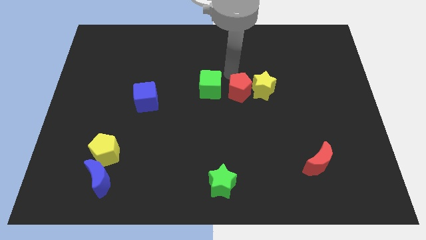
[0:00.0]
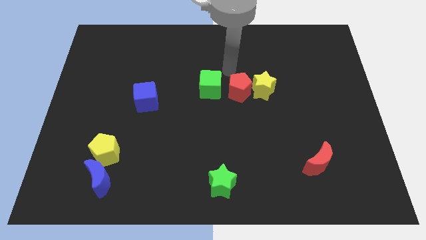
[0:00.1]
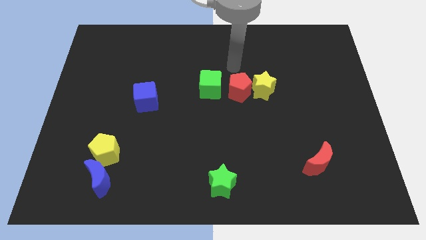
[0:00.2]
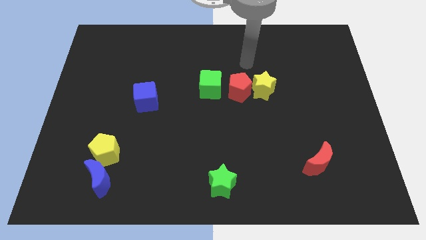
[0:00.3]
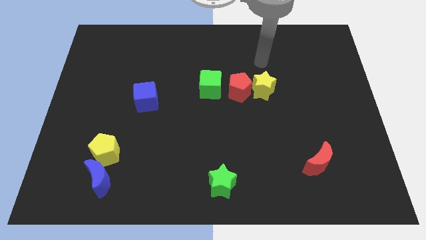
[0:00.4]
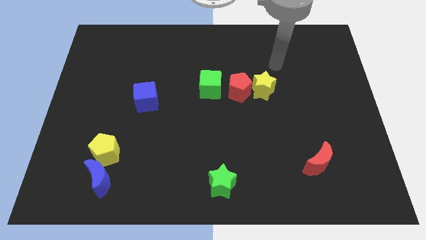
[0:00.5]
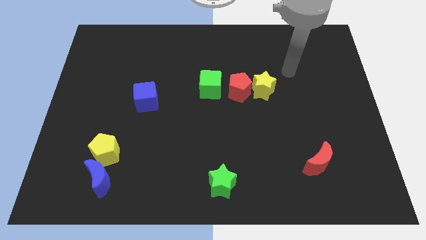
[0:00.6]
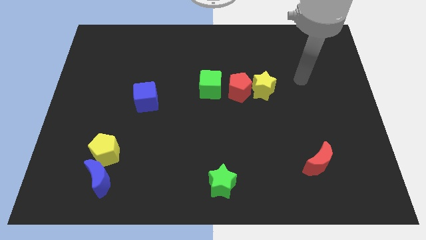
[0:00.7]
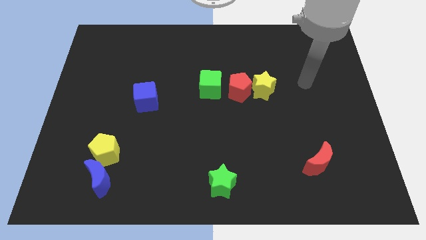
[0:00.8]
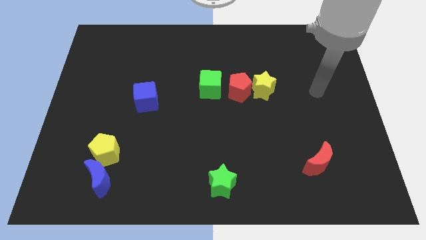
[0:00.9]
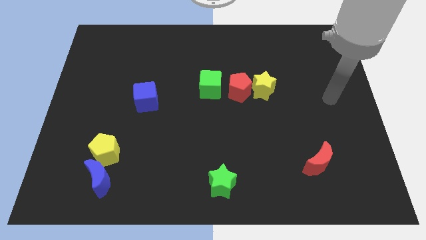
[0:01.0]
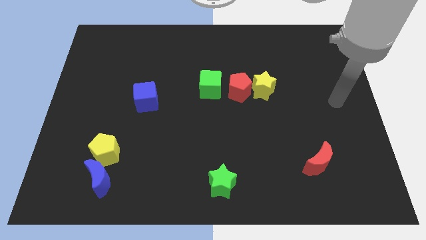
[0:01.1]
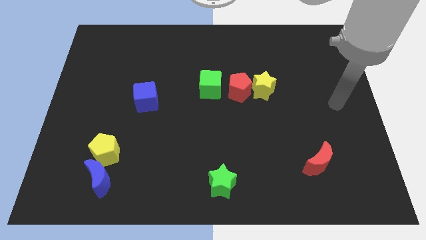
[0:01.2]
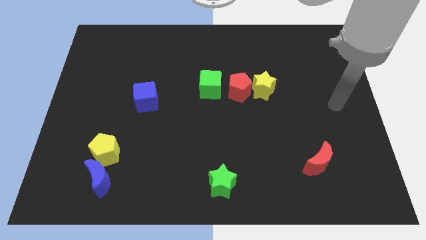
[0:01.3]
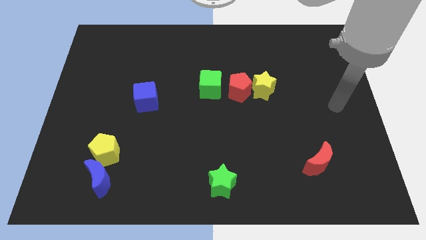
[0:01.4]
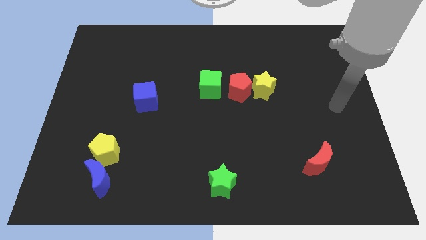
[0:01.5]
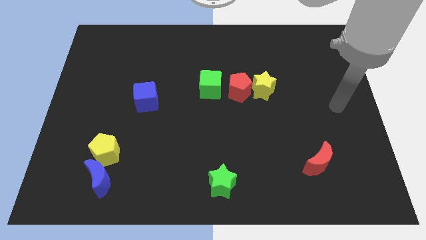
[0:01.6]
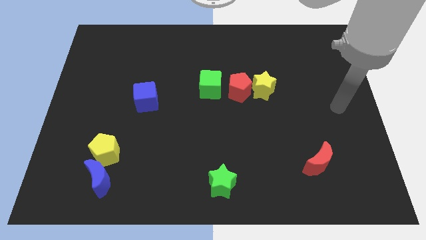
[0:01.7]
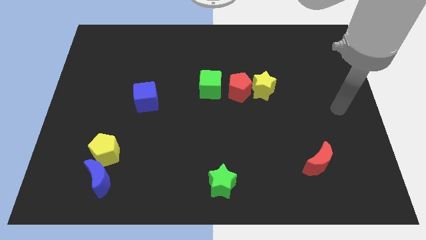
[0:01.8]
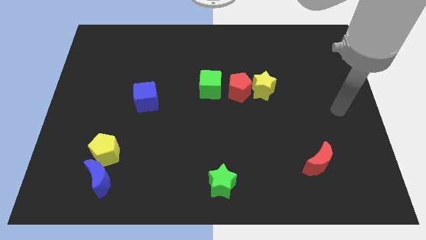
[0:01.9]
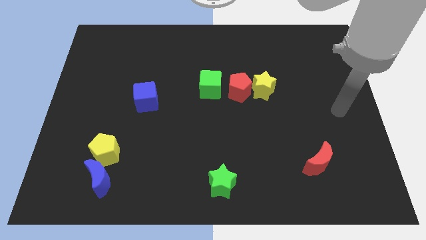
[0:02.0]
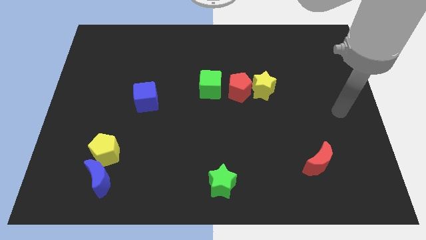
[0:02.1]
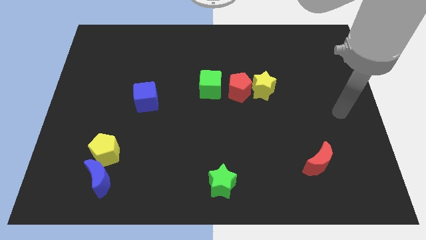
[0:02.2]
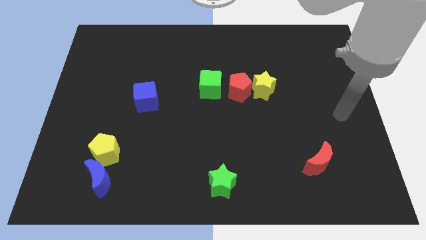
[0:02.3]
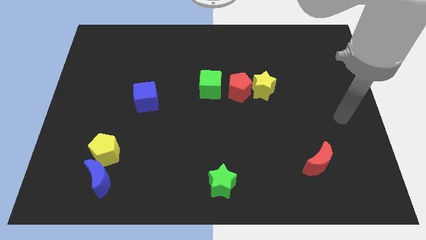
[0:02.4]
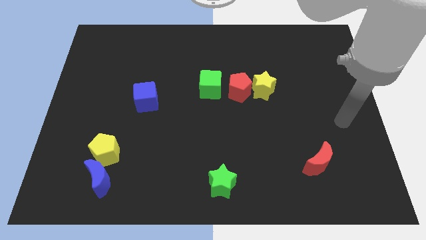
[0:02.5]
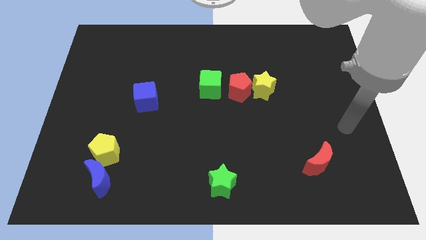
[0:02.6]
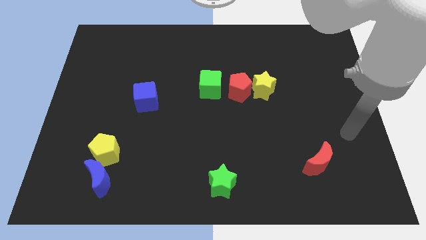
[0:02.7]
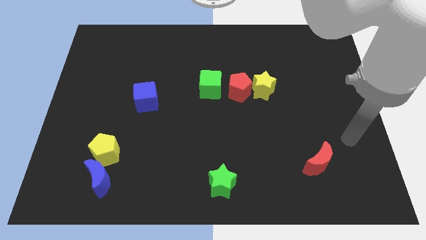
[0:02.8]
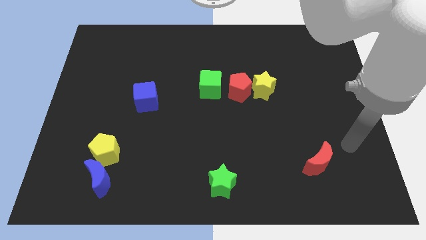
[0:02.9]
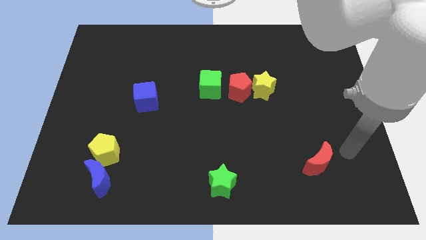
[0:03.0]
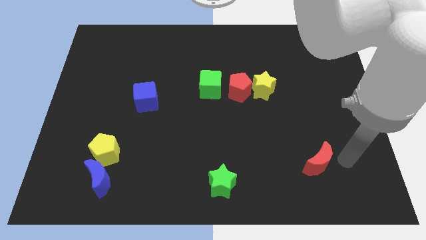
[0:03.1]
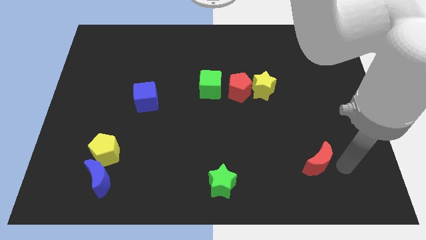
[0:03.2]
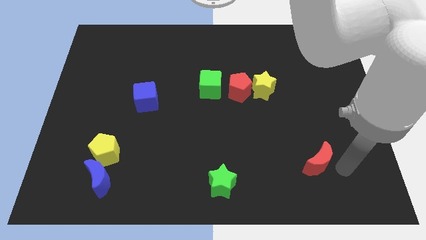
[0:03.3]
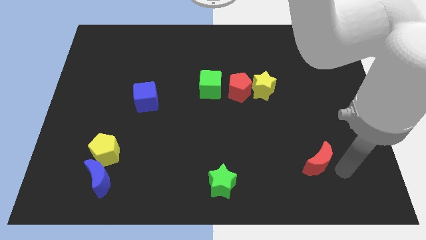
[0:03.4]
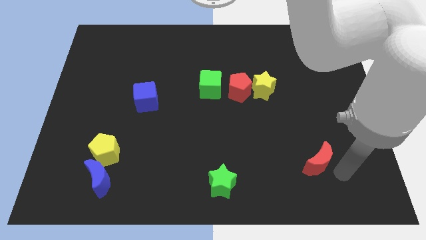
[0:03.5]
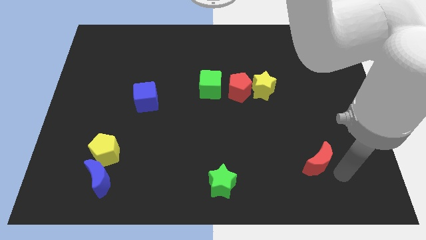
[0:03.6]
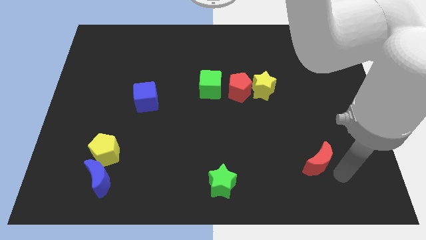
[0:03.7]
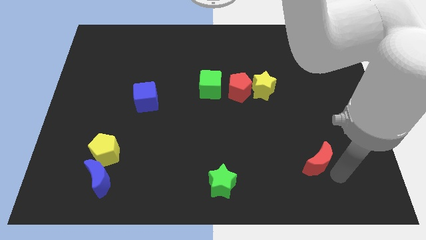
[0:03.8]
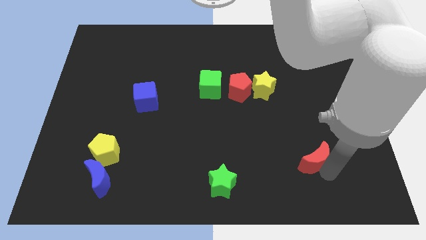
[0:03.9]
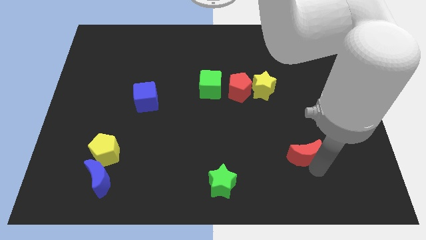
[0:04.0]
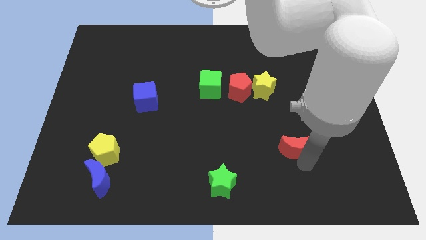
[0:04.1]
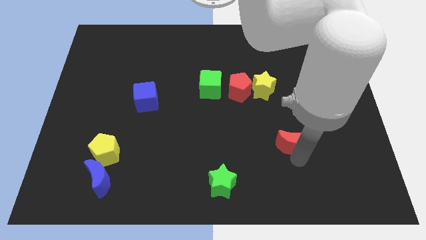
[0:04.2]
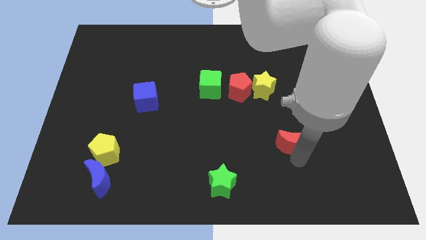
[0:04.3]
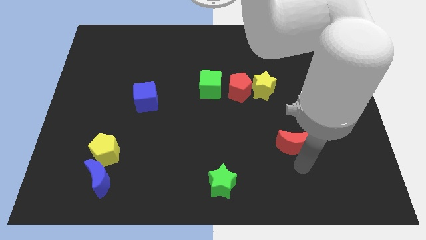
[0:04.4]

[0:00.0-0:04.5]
move the red crescent to the top of the board

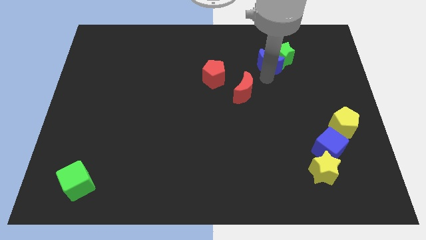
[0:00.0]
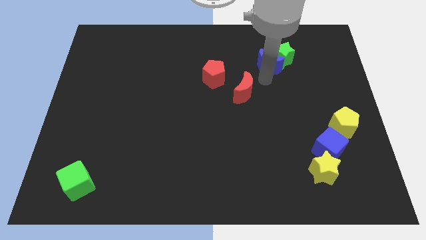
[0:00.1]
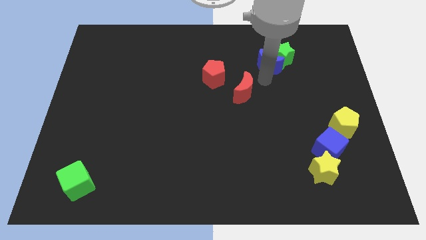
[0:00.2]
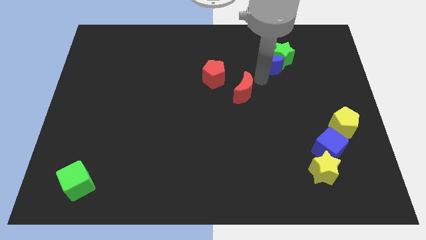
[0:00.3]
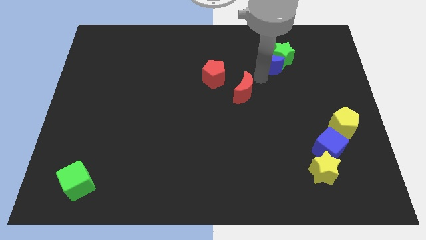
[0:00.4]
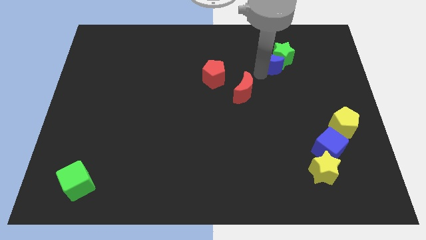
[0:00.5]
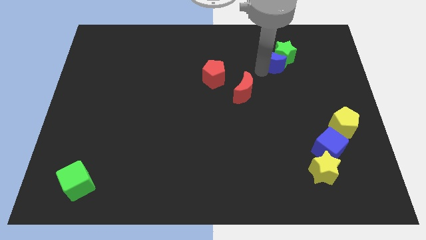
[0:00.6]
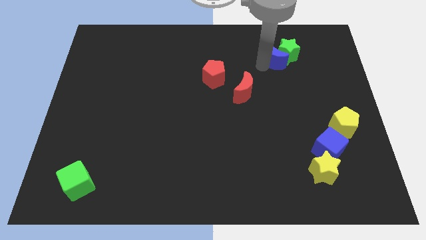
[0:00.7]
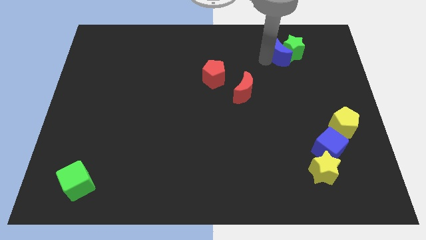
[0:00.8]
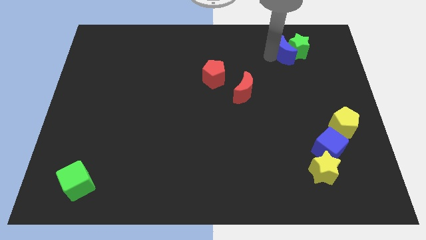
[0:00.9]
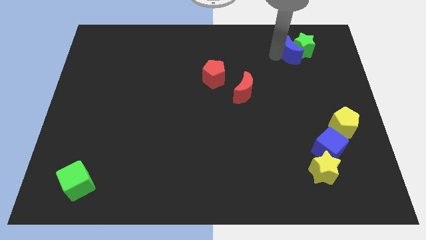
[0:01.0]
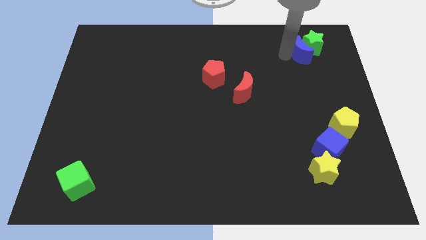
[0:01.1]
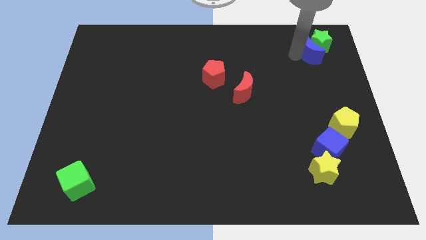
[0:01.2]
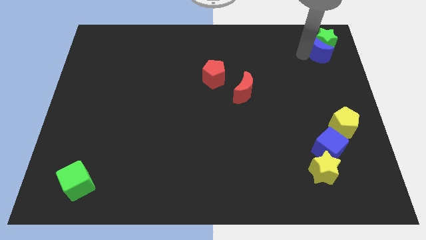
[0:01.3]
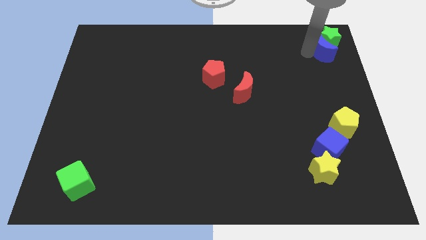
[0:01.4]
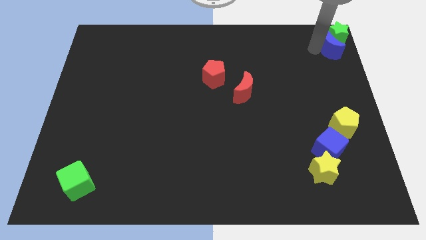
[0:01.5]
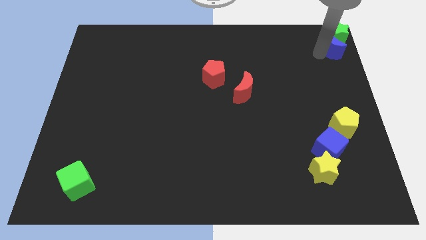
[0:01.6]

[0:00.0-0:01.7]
push the blue moon and green star to the top right

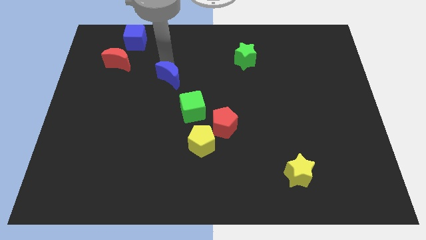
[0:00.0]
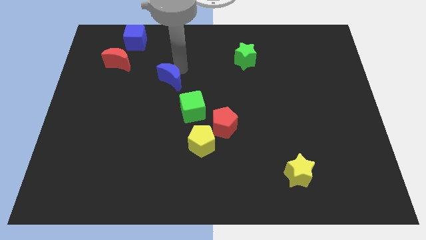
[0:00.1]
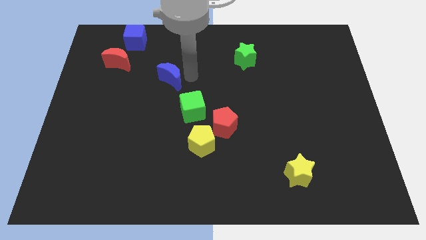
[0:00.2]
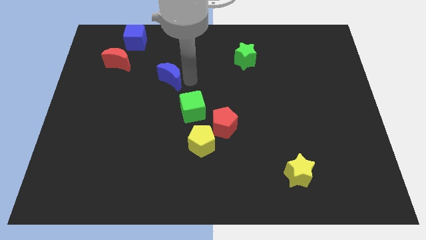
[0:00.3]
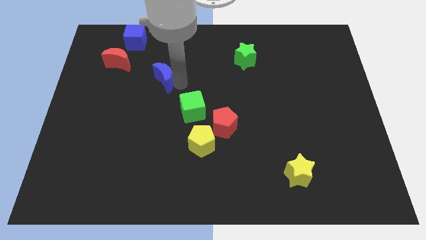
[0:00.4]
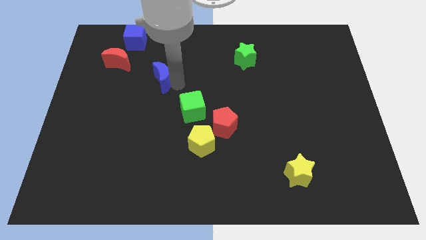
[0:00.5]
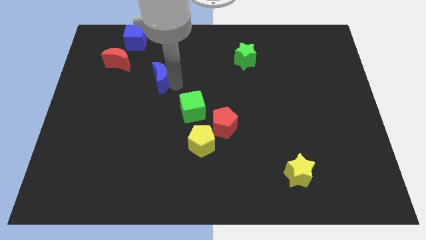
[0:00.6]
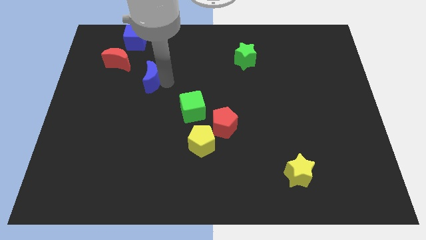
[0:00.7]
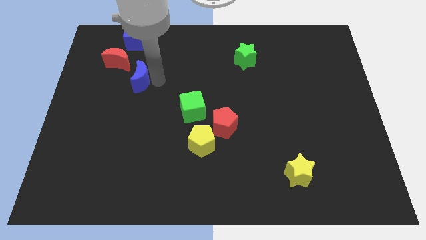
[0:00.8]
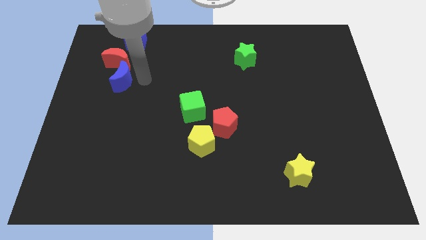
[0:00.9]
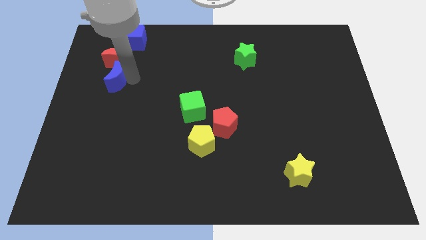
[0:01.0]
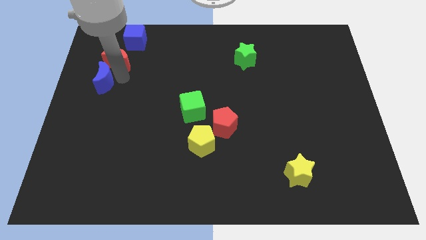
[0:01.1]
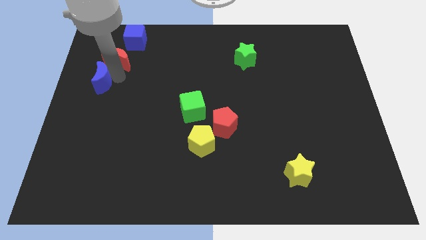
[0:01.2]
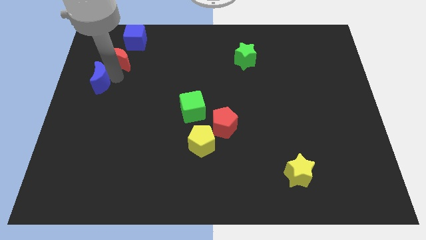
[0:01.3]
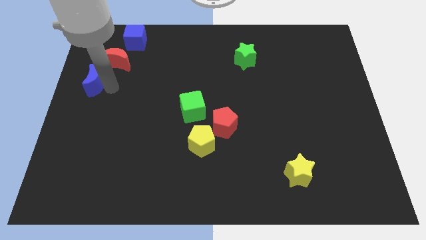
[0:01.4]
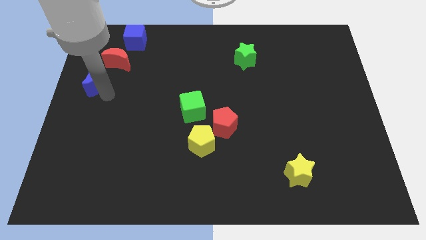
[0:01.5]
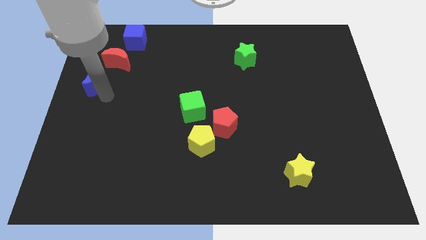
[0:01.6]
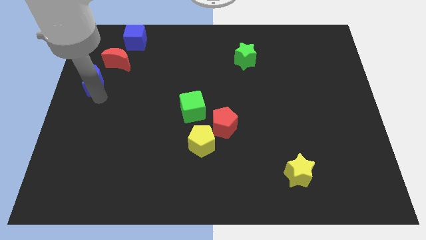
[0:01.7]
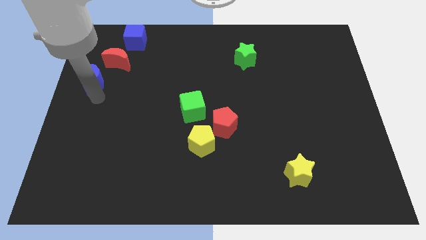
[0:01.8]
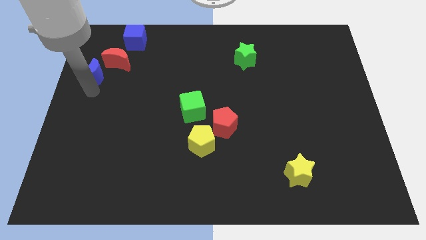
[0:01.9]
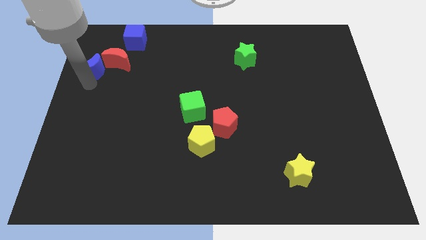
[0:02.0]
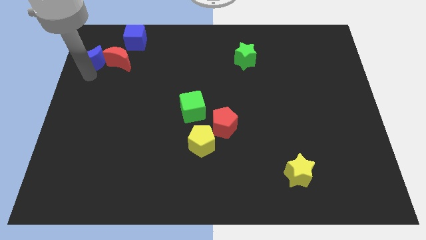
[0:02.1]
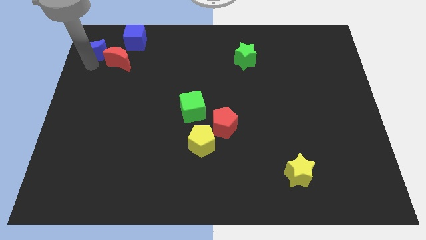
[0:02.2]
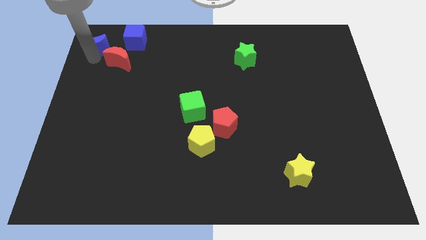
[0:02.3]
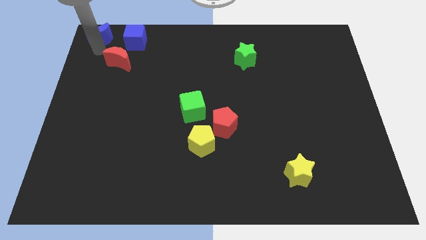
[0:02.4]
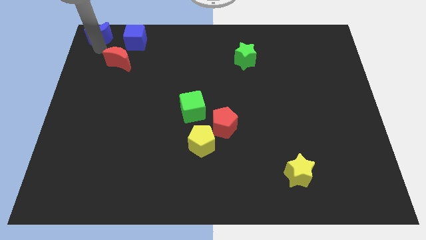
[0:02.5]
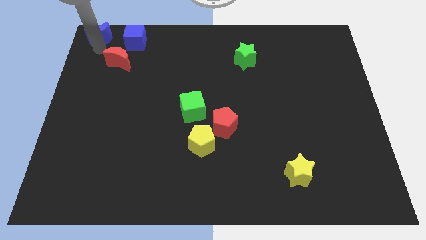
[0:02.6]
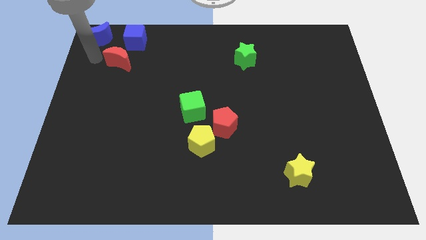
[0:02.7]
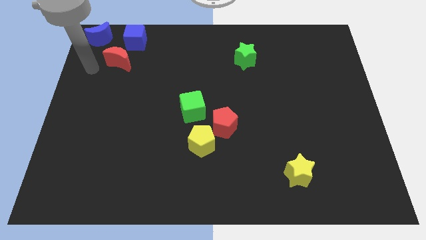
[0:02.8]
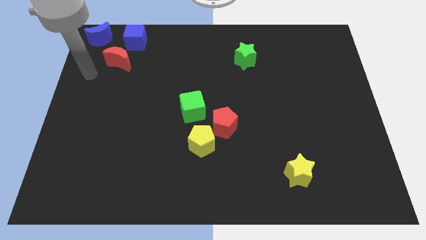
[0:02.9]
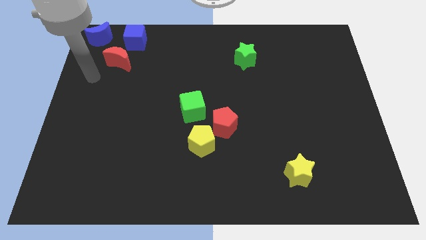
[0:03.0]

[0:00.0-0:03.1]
move the blue crescent left beside the blue cube
